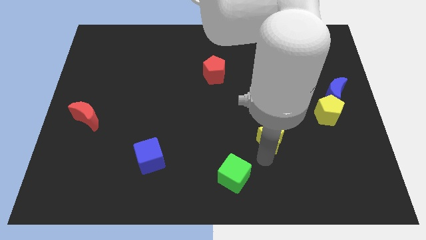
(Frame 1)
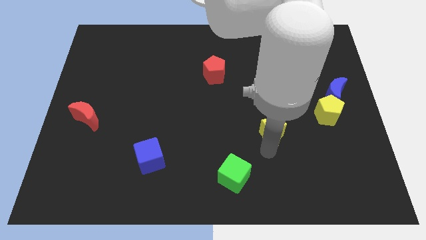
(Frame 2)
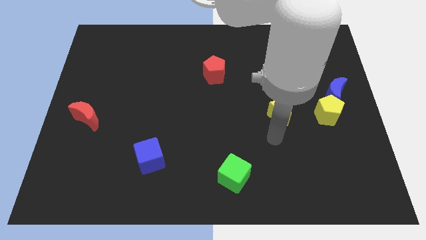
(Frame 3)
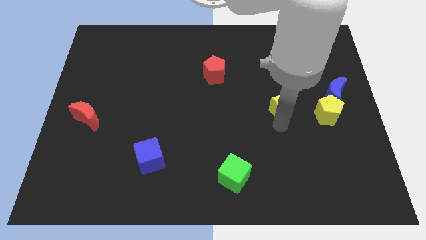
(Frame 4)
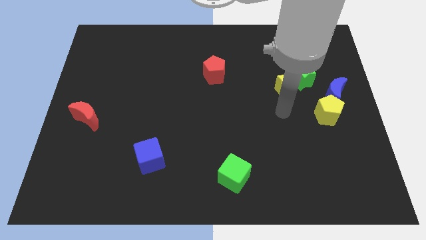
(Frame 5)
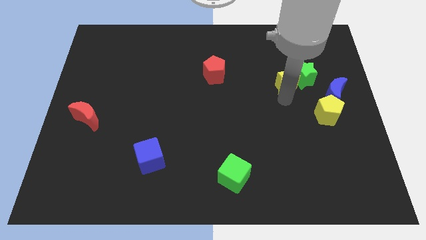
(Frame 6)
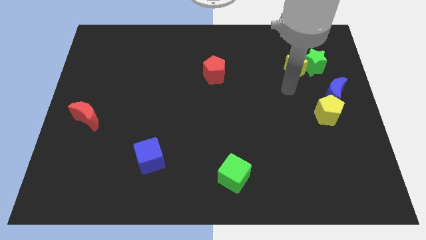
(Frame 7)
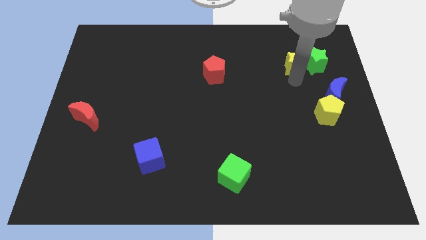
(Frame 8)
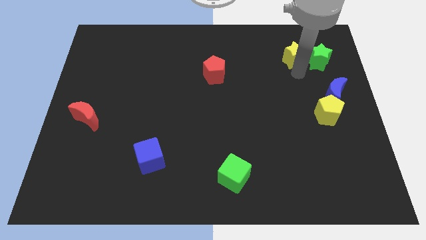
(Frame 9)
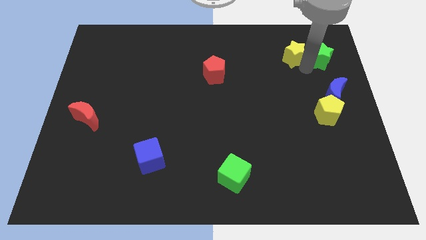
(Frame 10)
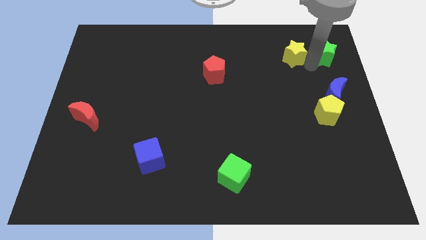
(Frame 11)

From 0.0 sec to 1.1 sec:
push the yellow star into the green star

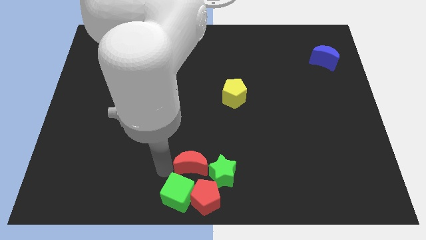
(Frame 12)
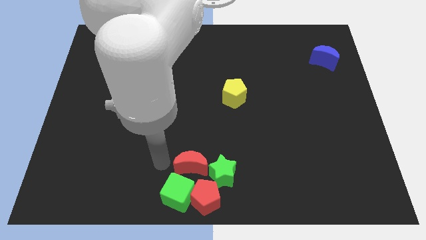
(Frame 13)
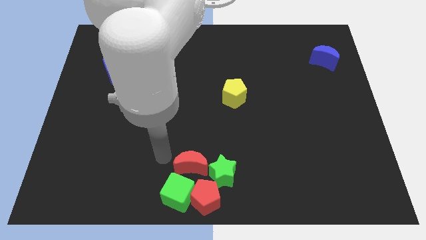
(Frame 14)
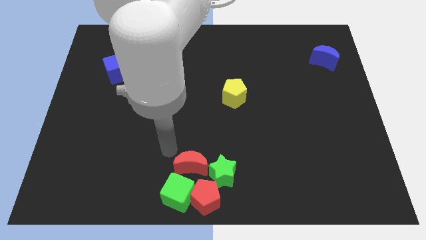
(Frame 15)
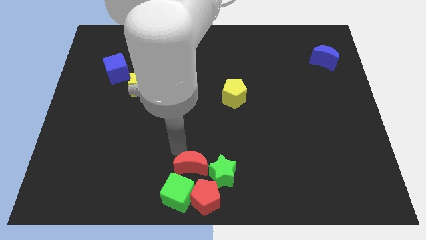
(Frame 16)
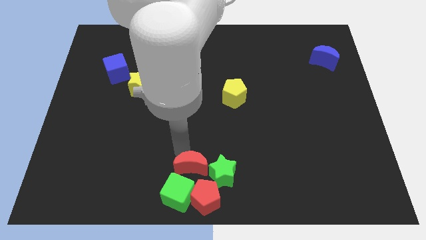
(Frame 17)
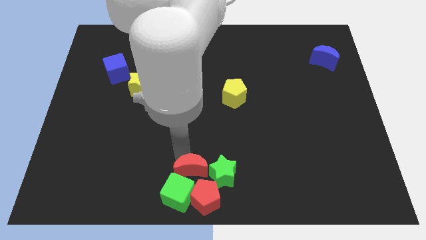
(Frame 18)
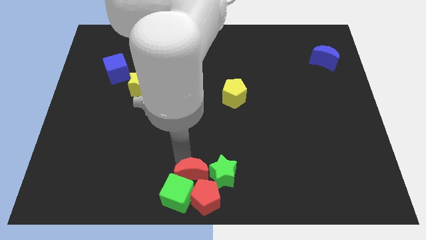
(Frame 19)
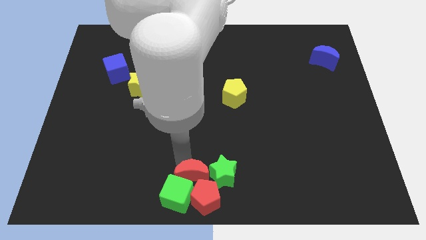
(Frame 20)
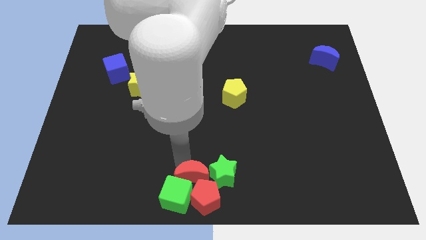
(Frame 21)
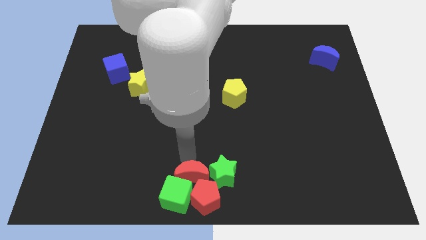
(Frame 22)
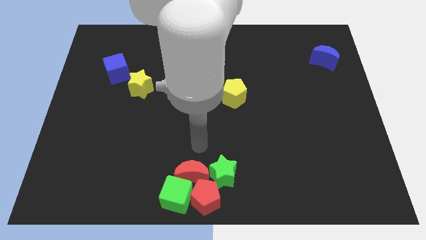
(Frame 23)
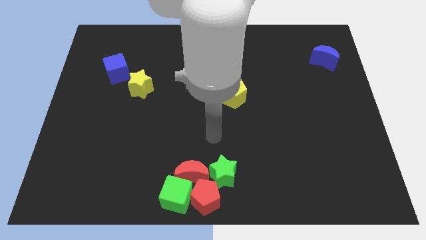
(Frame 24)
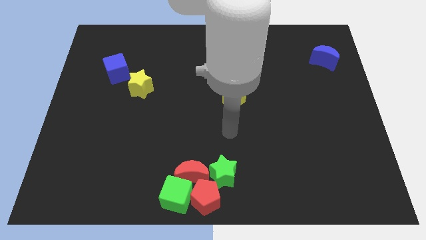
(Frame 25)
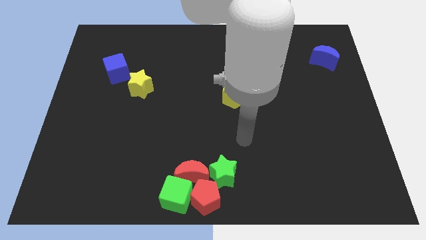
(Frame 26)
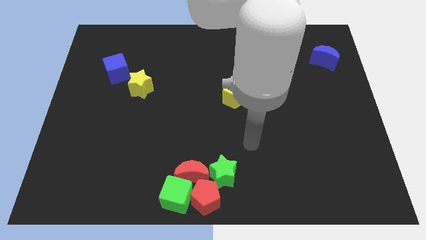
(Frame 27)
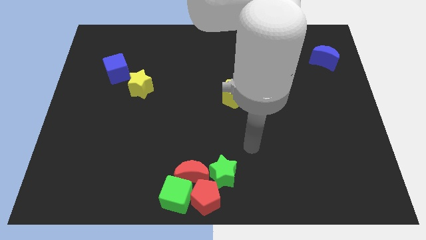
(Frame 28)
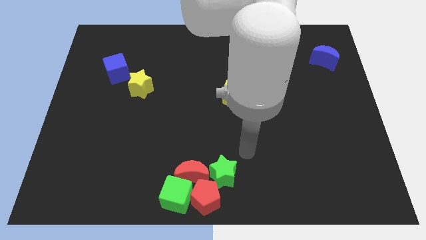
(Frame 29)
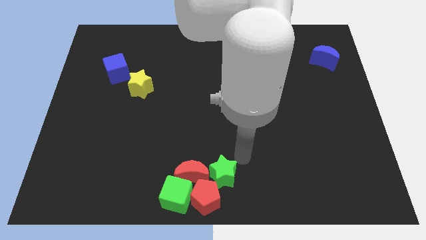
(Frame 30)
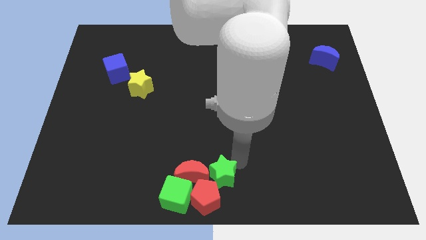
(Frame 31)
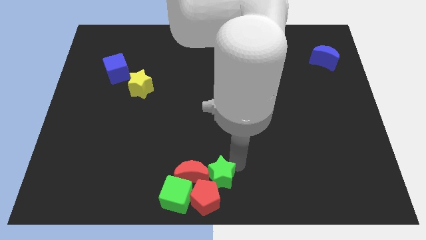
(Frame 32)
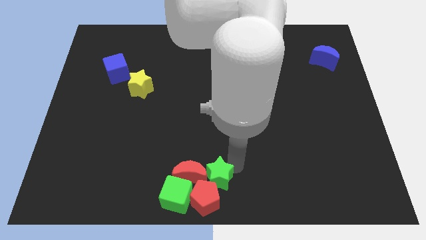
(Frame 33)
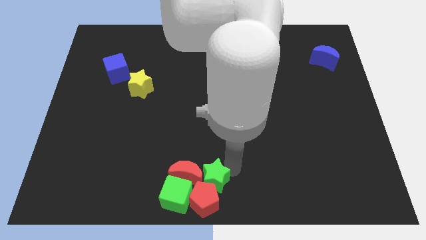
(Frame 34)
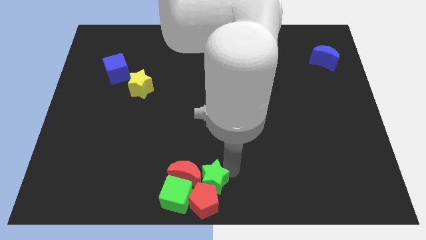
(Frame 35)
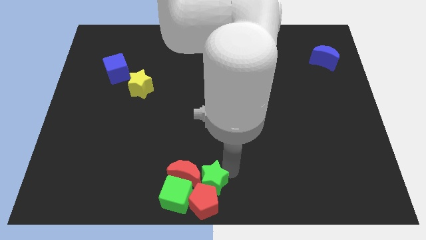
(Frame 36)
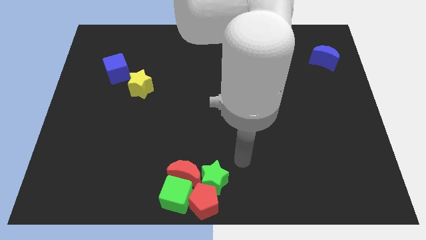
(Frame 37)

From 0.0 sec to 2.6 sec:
push the group of blocks slightly to bottom

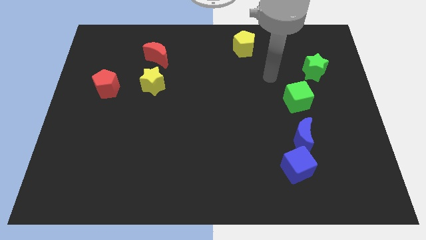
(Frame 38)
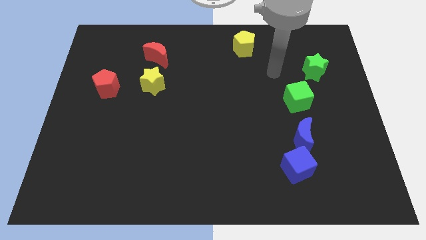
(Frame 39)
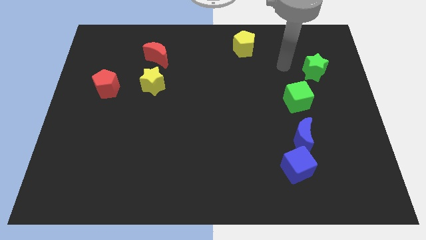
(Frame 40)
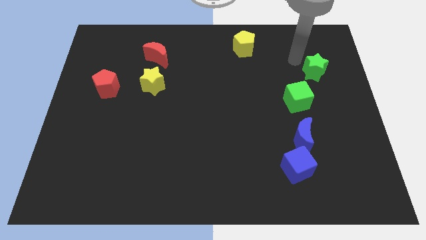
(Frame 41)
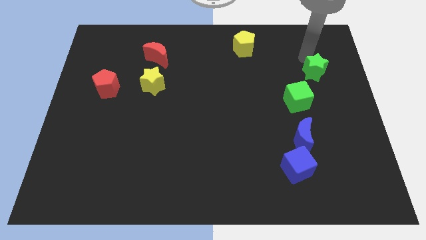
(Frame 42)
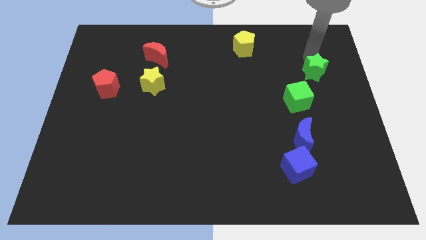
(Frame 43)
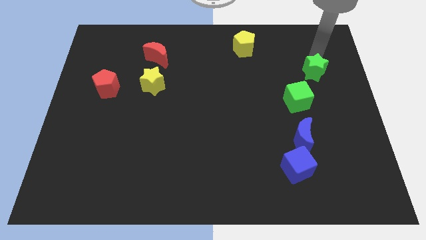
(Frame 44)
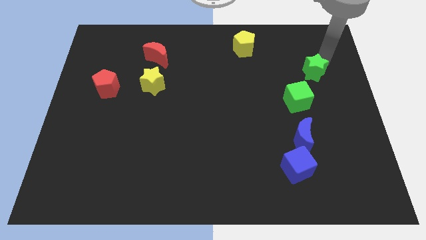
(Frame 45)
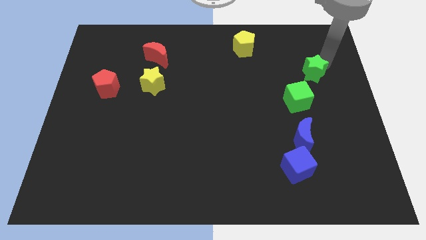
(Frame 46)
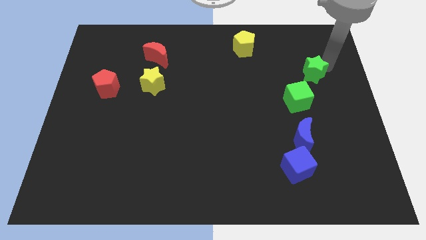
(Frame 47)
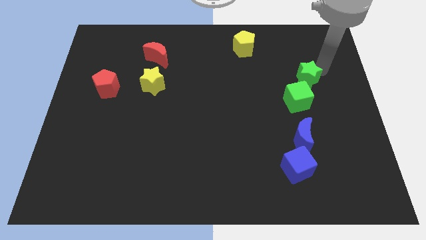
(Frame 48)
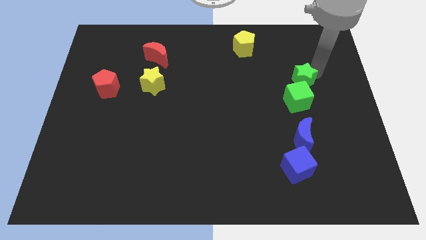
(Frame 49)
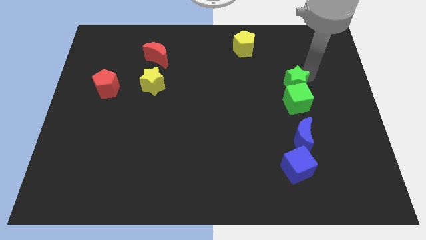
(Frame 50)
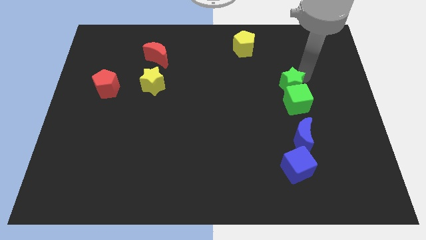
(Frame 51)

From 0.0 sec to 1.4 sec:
push the green star into the green cube

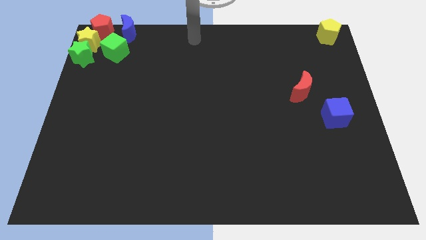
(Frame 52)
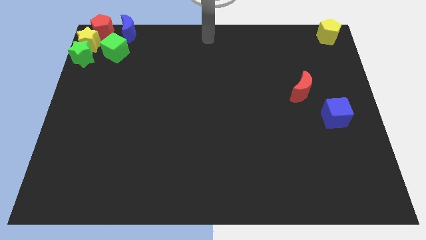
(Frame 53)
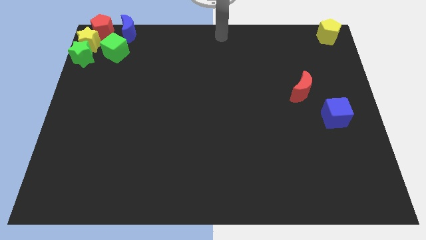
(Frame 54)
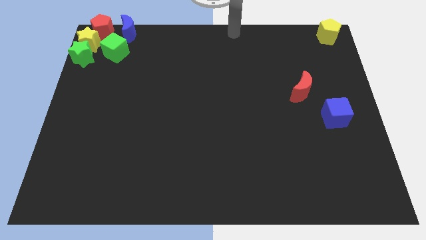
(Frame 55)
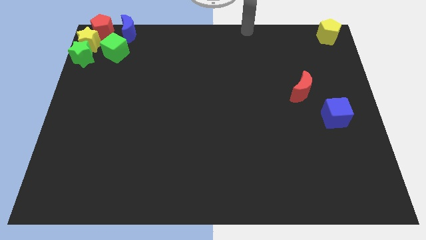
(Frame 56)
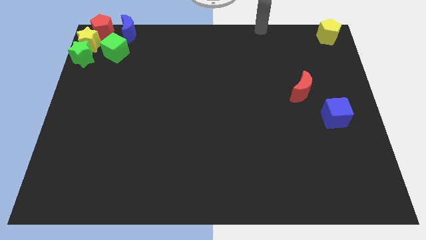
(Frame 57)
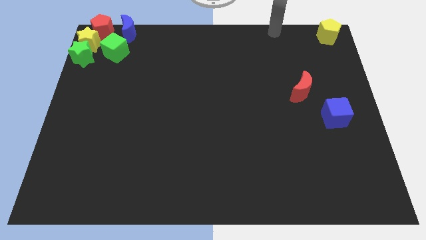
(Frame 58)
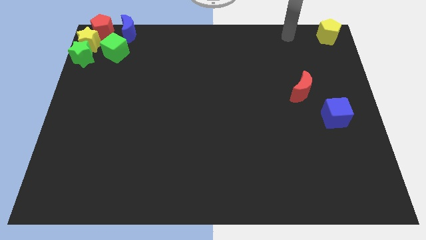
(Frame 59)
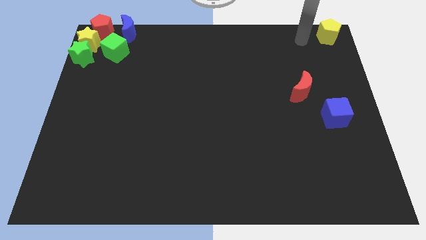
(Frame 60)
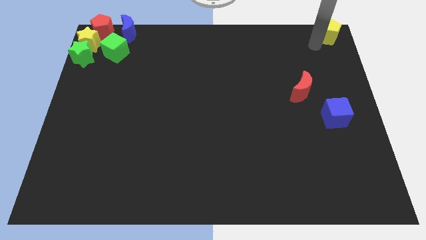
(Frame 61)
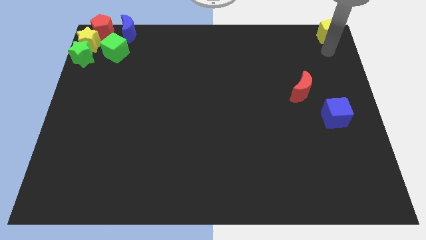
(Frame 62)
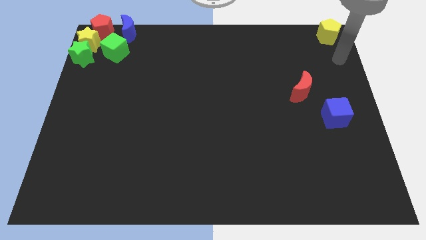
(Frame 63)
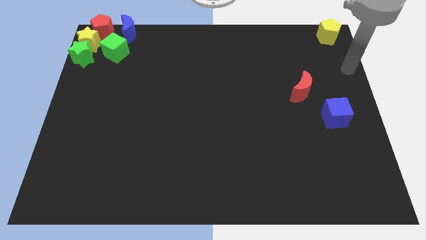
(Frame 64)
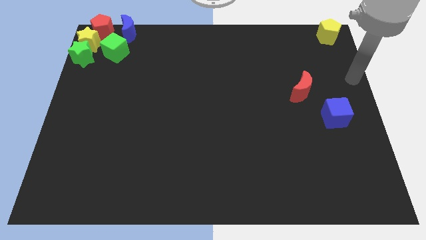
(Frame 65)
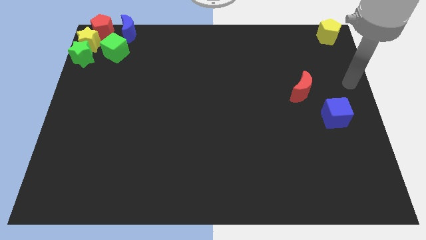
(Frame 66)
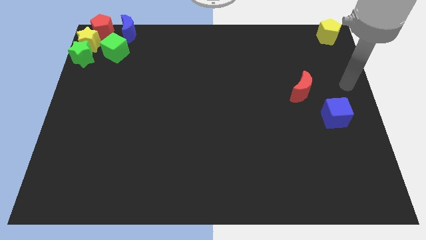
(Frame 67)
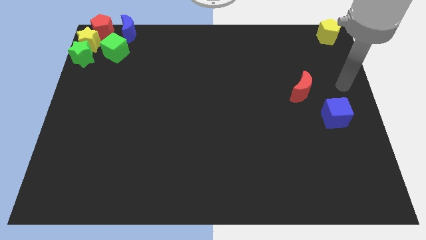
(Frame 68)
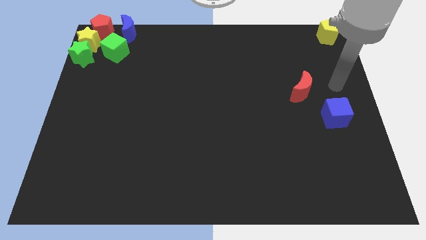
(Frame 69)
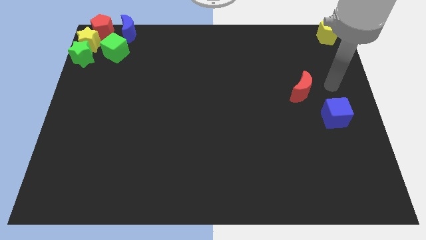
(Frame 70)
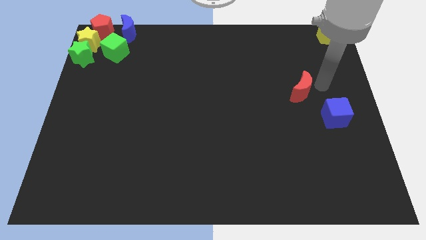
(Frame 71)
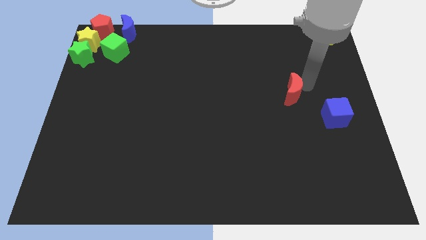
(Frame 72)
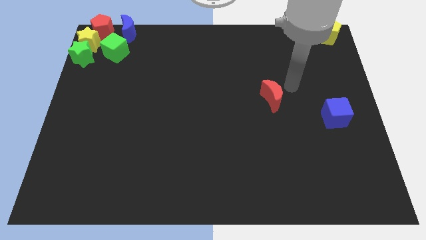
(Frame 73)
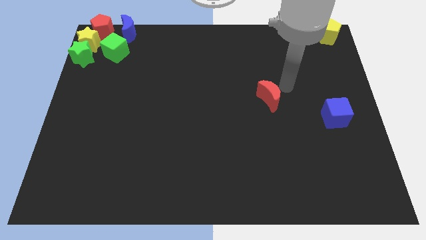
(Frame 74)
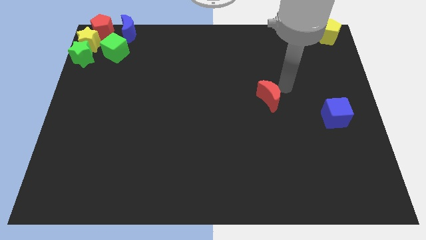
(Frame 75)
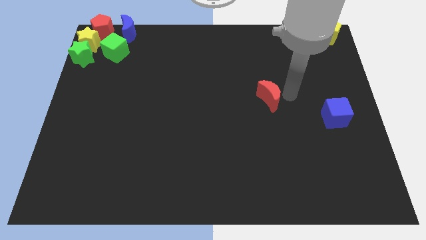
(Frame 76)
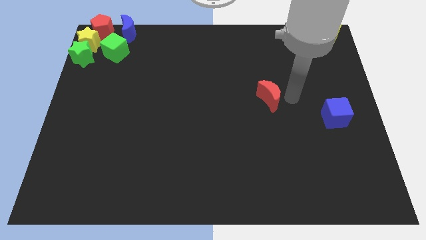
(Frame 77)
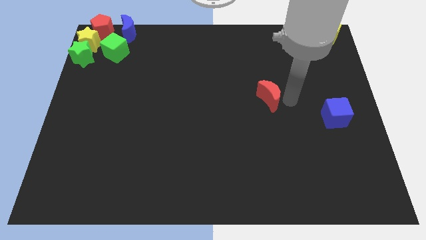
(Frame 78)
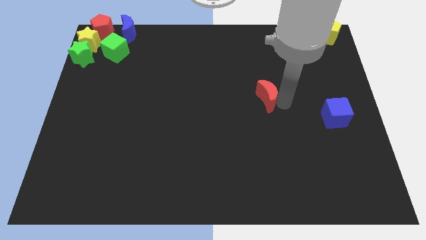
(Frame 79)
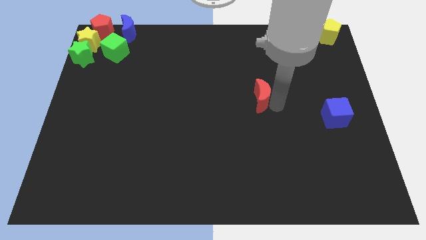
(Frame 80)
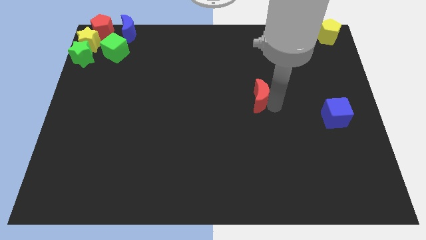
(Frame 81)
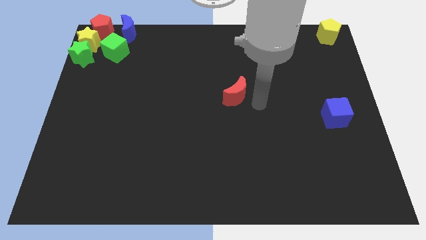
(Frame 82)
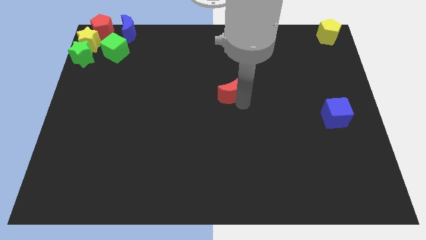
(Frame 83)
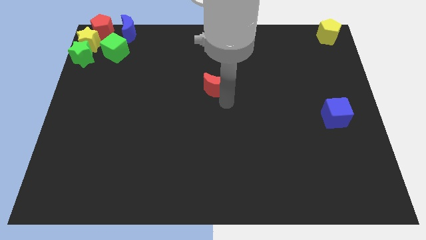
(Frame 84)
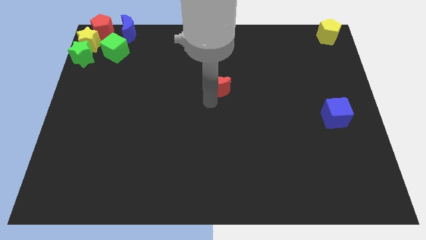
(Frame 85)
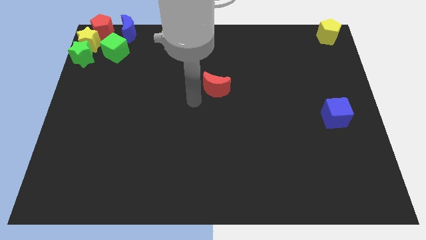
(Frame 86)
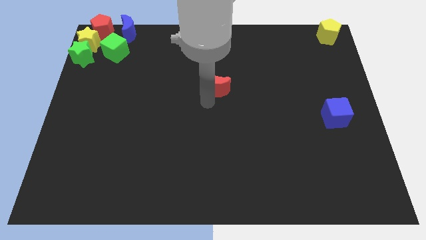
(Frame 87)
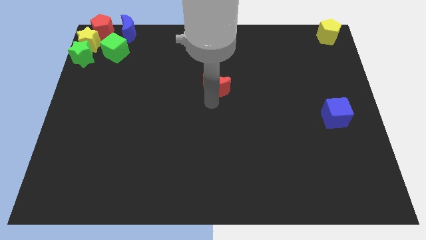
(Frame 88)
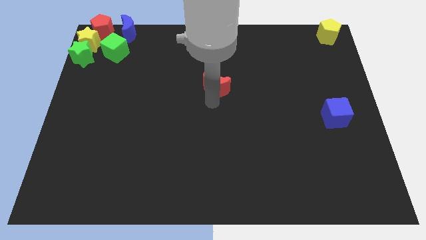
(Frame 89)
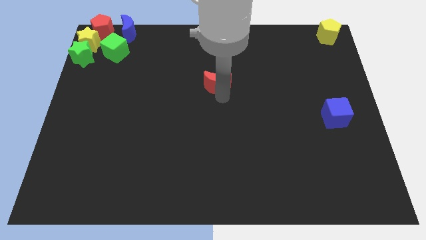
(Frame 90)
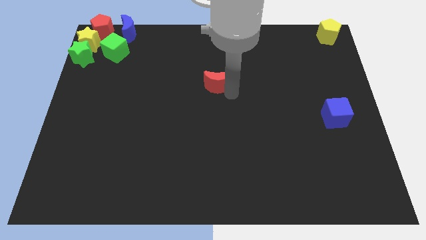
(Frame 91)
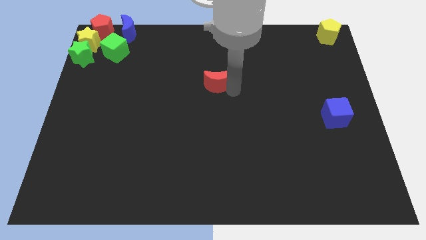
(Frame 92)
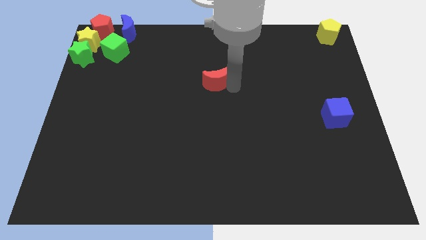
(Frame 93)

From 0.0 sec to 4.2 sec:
slide the red crescent to the center of the board
